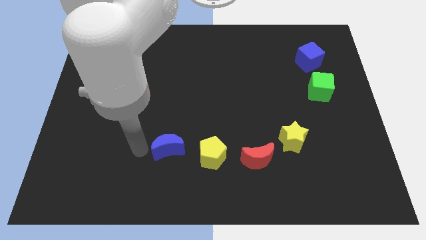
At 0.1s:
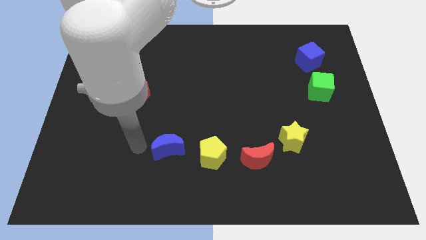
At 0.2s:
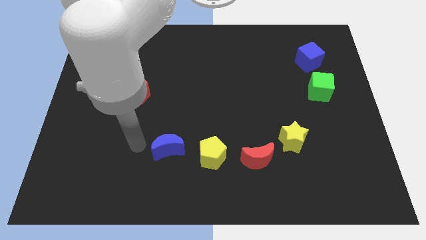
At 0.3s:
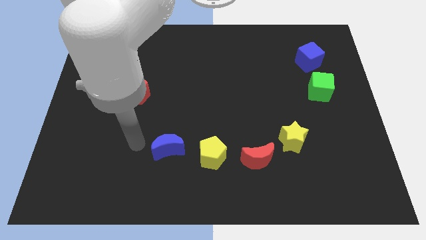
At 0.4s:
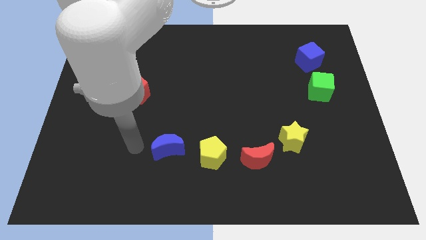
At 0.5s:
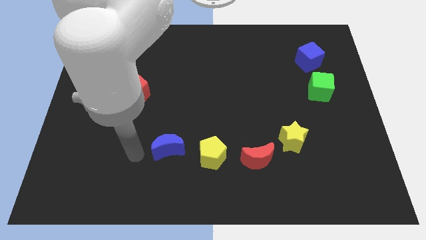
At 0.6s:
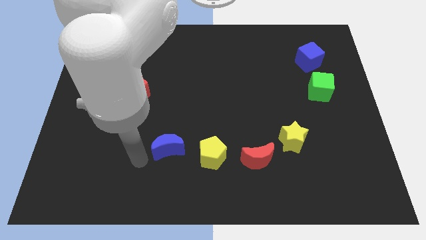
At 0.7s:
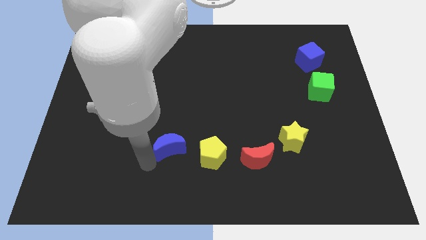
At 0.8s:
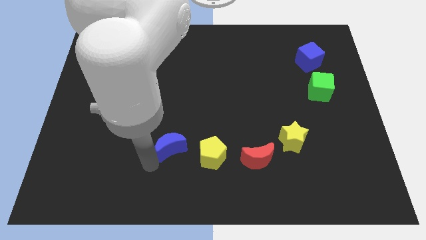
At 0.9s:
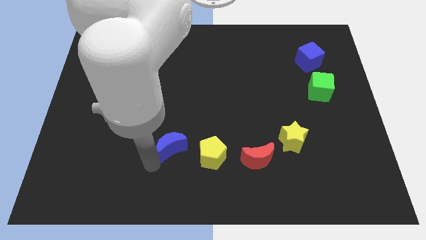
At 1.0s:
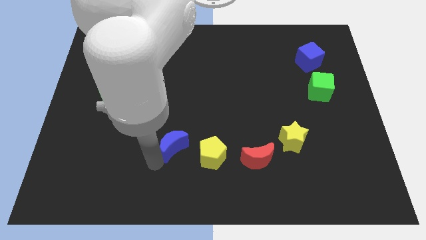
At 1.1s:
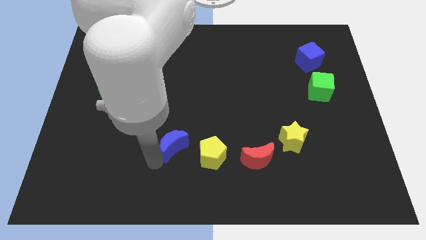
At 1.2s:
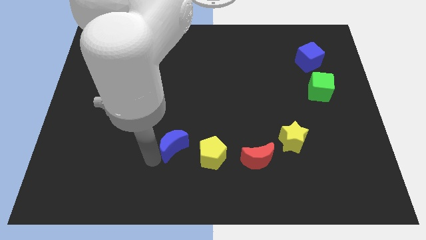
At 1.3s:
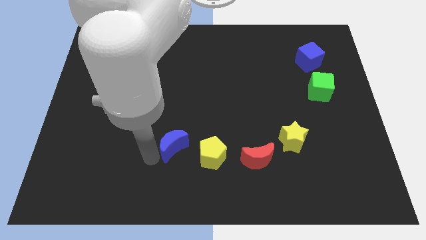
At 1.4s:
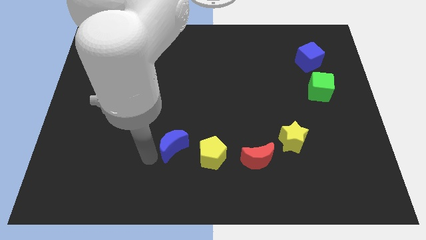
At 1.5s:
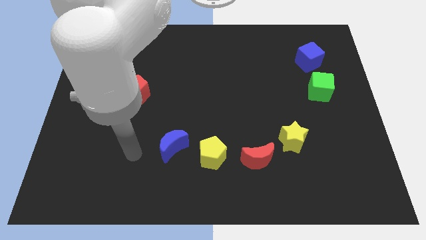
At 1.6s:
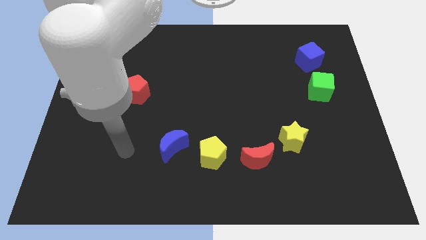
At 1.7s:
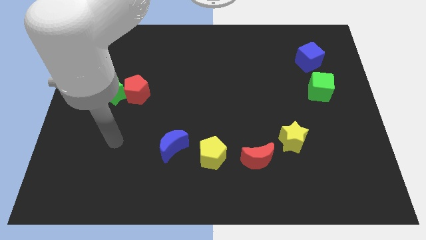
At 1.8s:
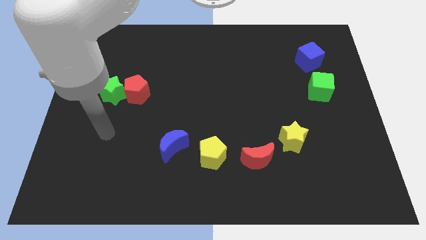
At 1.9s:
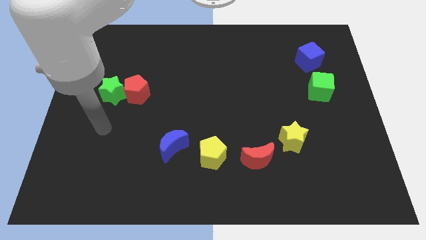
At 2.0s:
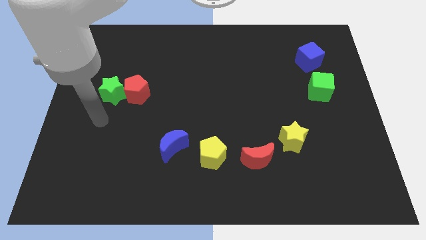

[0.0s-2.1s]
slide the blue moon slightly to the right

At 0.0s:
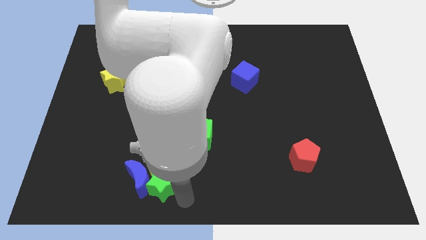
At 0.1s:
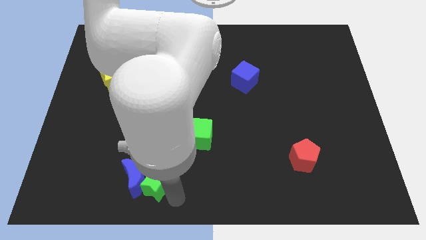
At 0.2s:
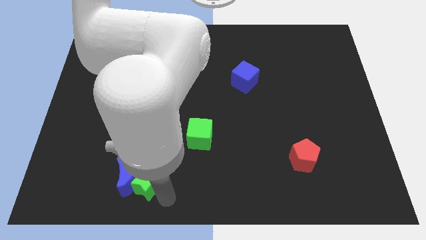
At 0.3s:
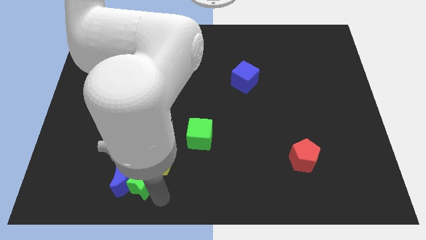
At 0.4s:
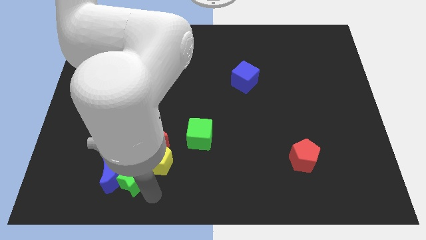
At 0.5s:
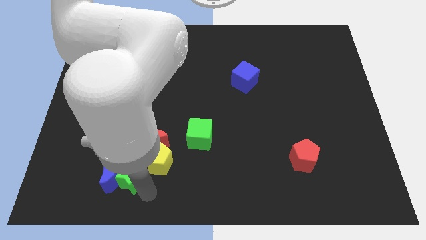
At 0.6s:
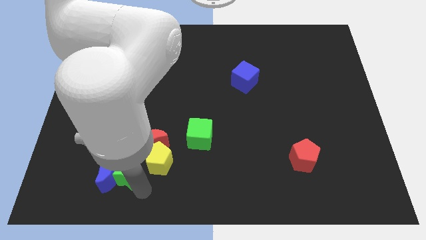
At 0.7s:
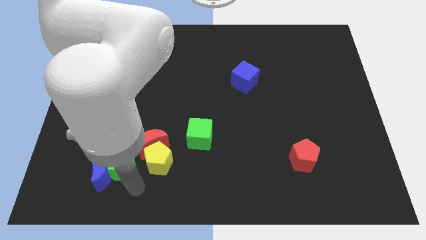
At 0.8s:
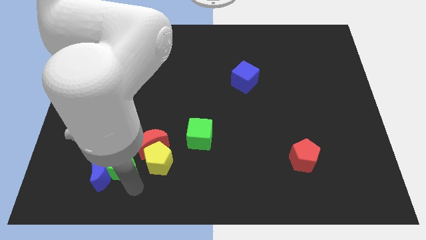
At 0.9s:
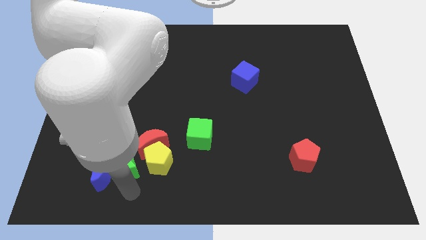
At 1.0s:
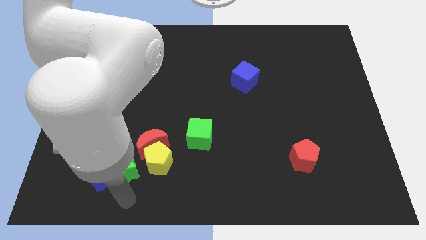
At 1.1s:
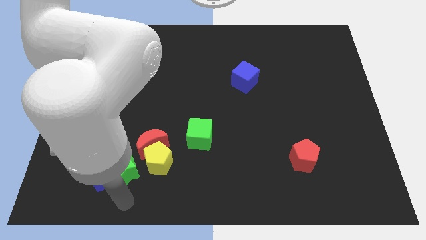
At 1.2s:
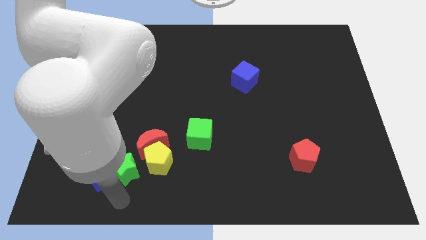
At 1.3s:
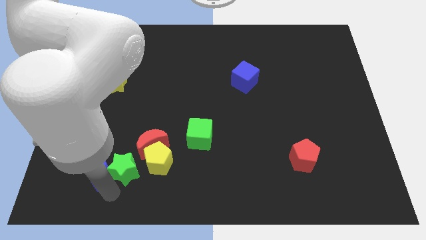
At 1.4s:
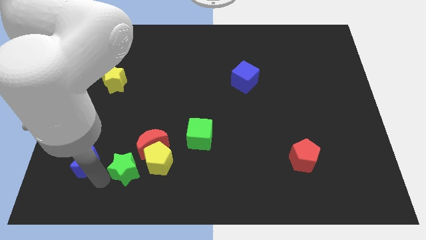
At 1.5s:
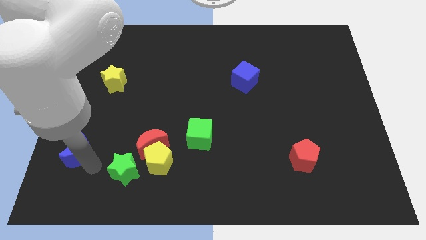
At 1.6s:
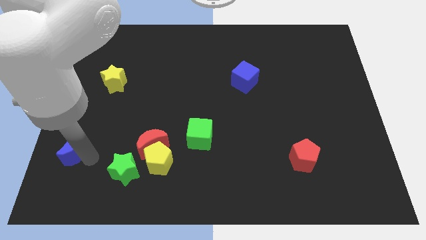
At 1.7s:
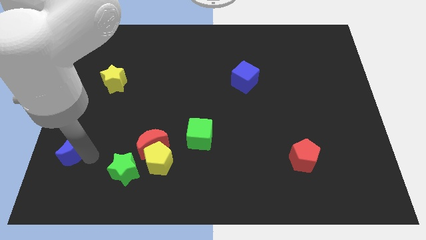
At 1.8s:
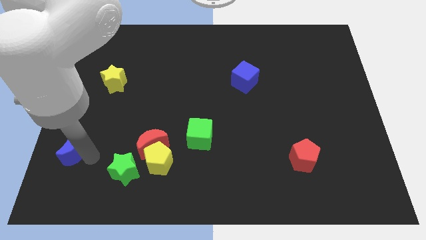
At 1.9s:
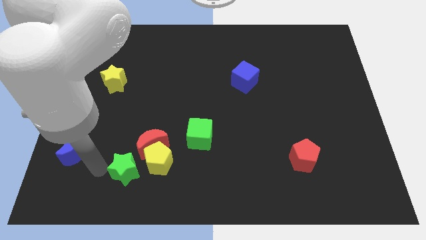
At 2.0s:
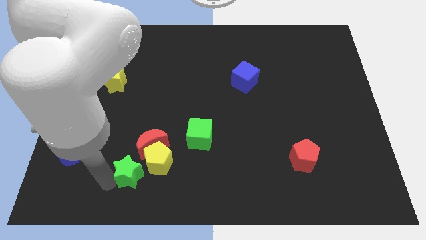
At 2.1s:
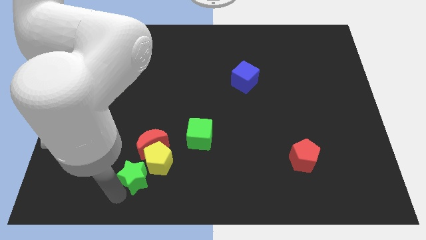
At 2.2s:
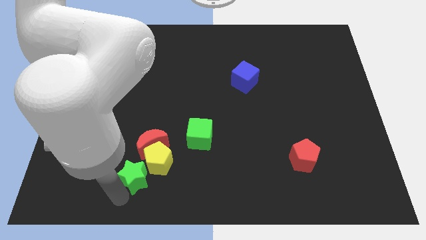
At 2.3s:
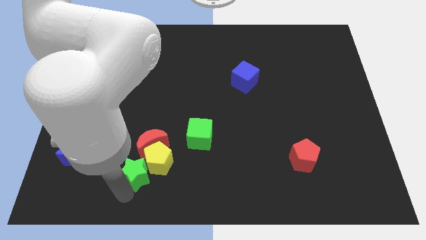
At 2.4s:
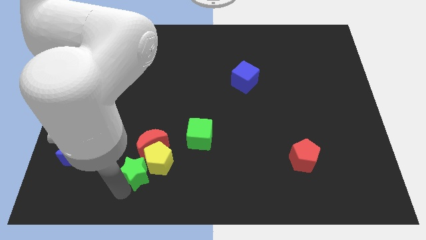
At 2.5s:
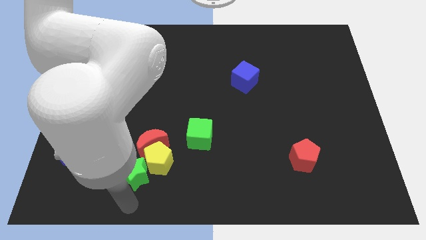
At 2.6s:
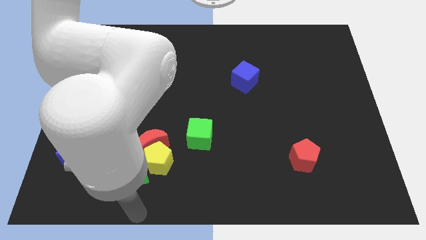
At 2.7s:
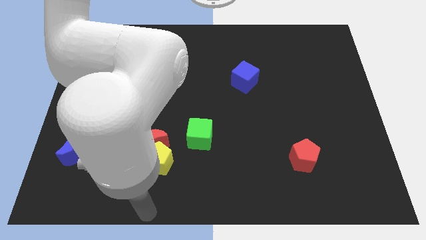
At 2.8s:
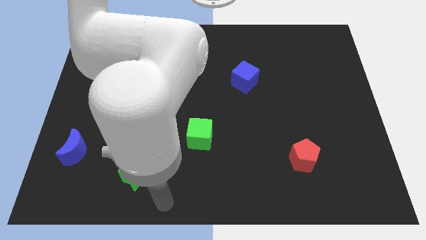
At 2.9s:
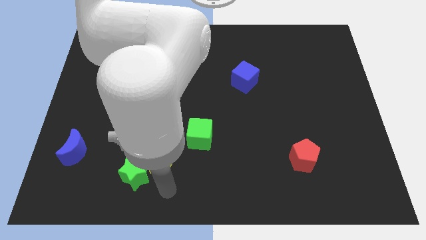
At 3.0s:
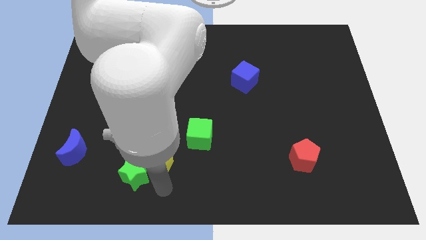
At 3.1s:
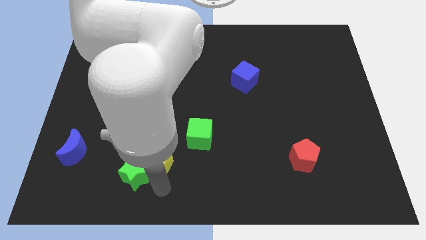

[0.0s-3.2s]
separate green star and blue moon

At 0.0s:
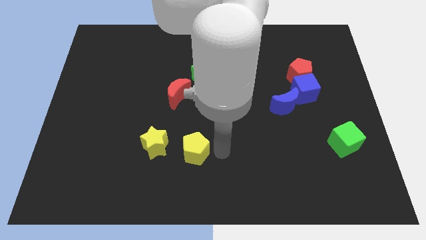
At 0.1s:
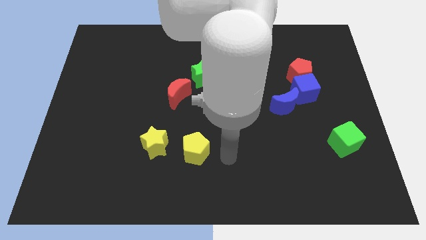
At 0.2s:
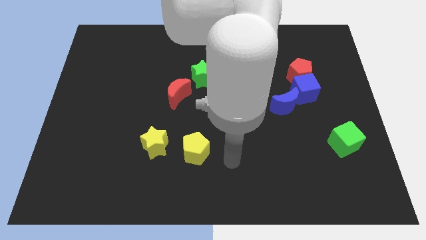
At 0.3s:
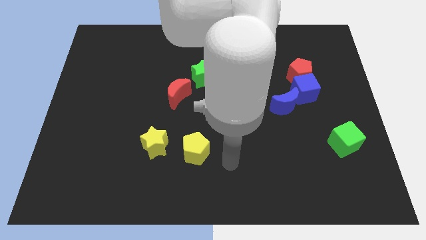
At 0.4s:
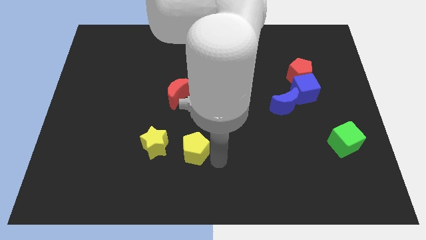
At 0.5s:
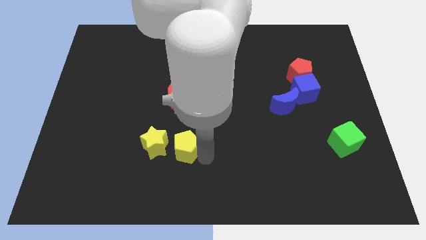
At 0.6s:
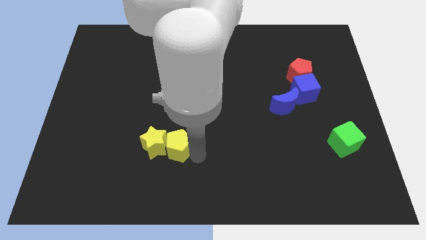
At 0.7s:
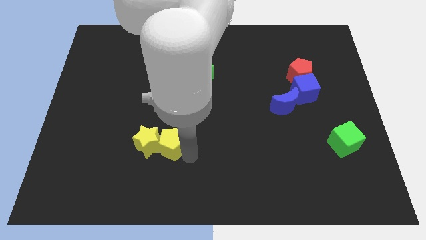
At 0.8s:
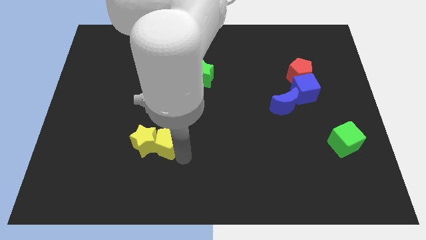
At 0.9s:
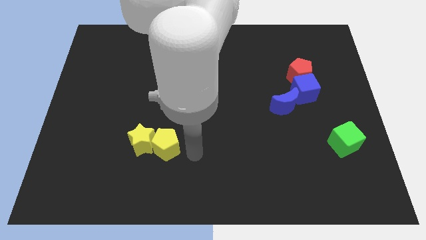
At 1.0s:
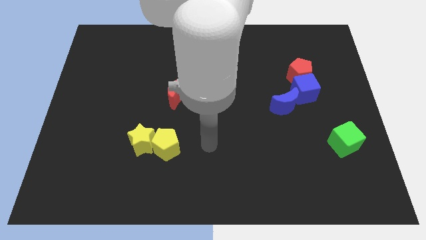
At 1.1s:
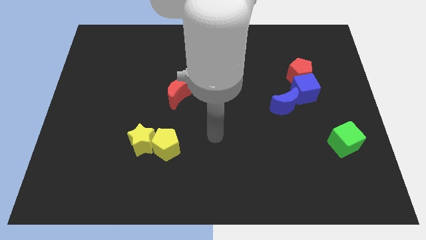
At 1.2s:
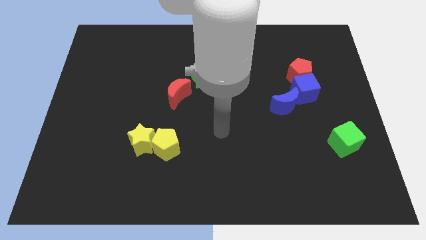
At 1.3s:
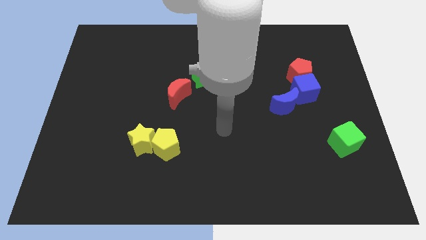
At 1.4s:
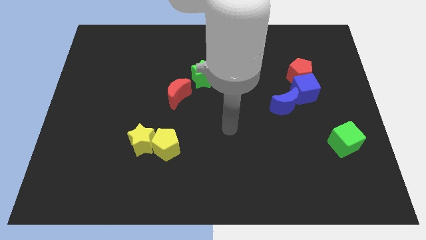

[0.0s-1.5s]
push the yellow pentagon into the yellow star

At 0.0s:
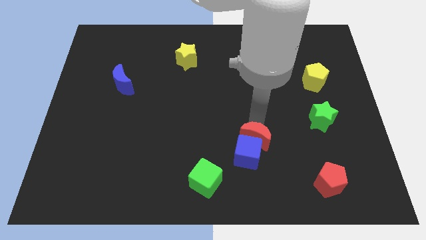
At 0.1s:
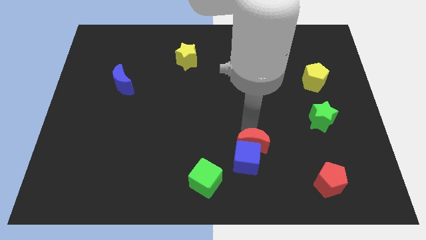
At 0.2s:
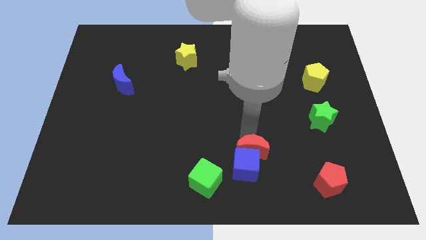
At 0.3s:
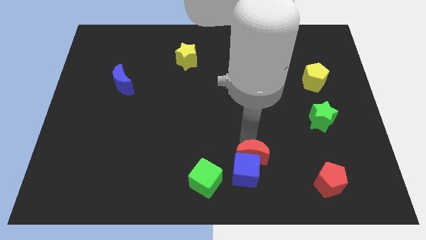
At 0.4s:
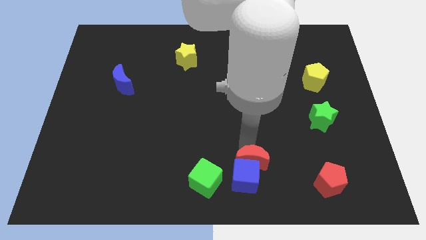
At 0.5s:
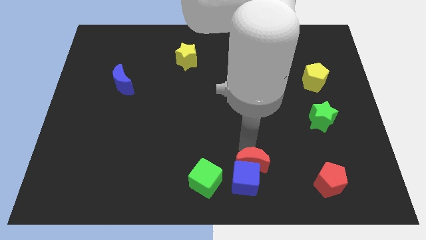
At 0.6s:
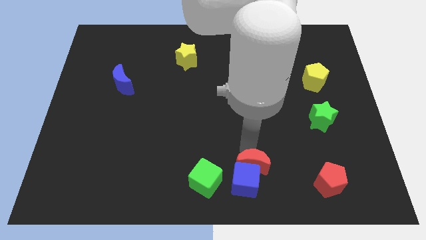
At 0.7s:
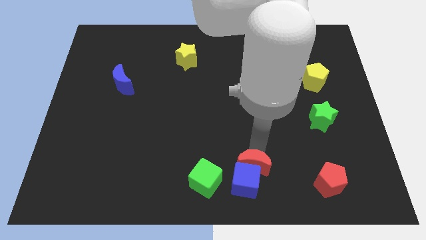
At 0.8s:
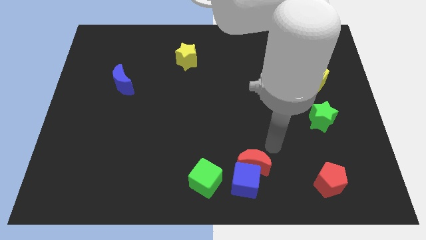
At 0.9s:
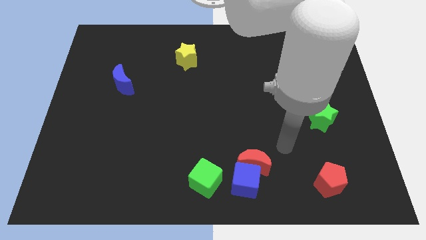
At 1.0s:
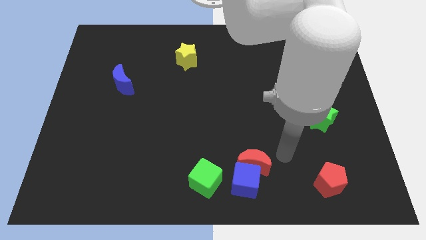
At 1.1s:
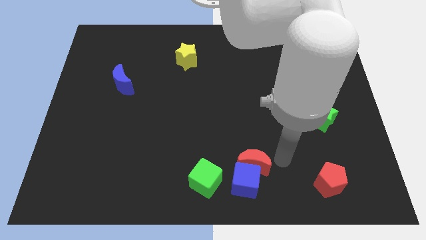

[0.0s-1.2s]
push the red crescent to the bottom of the board

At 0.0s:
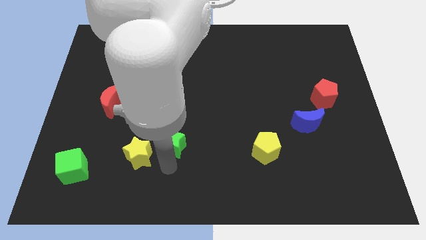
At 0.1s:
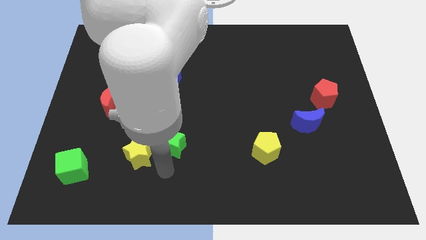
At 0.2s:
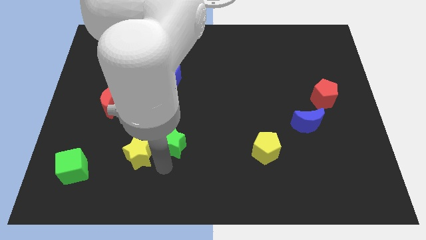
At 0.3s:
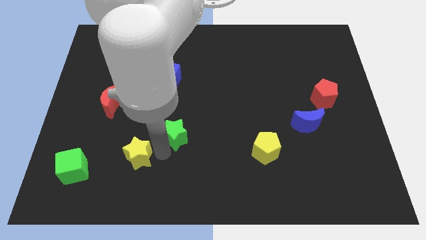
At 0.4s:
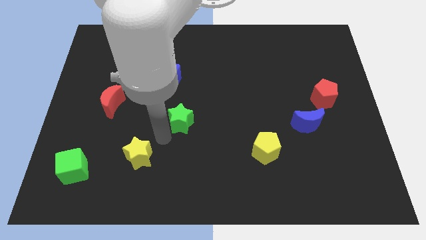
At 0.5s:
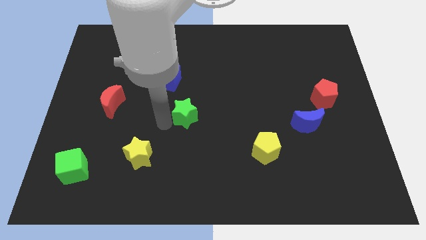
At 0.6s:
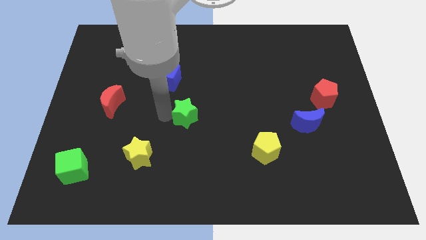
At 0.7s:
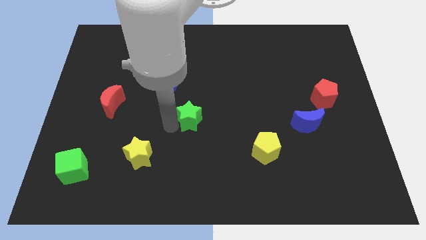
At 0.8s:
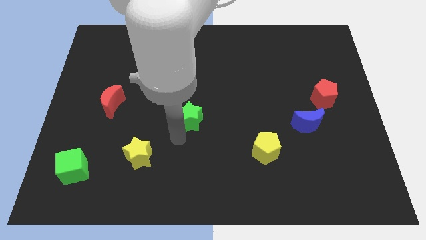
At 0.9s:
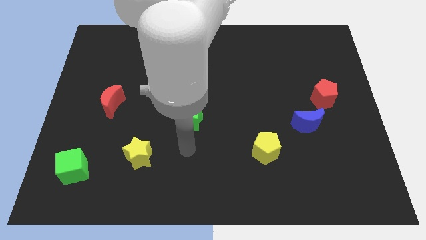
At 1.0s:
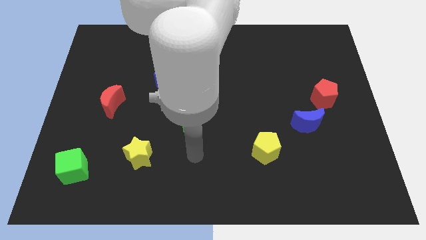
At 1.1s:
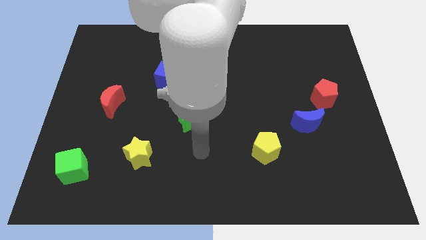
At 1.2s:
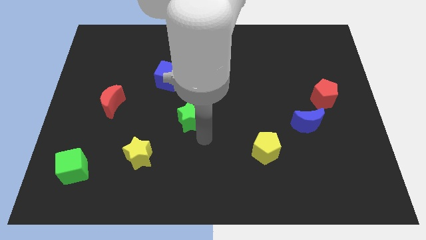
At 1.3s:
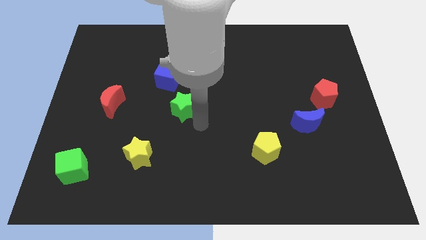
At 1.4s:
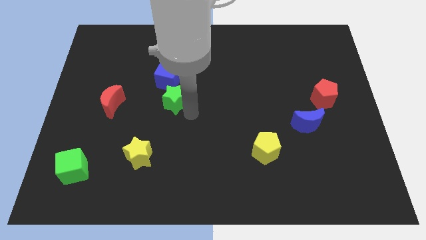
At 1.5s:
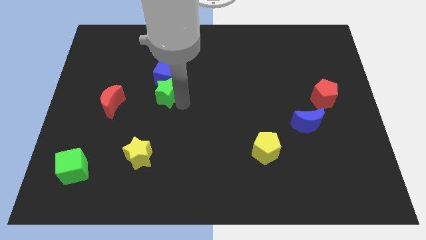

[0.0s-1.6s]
push the green star towards the blue cube
